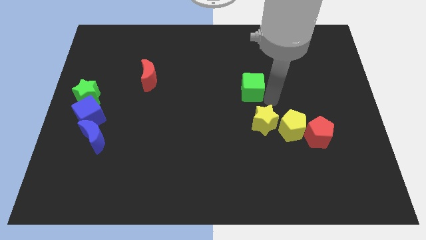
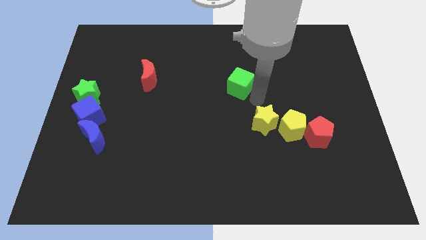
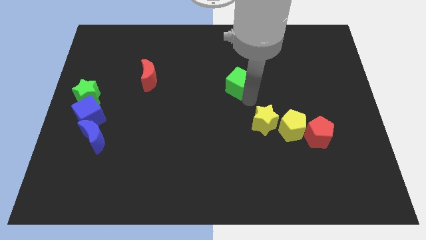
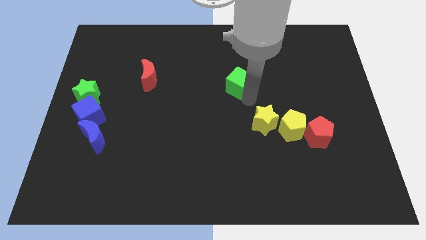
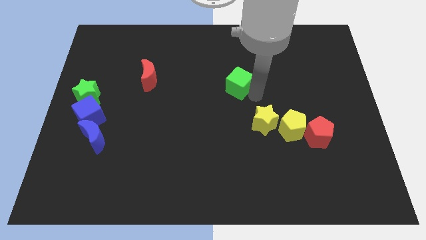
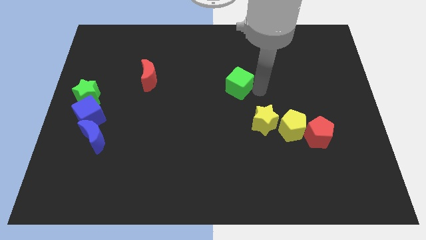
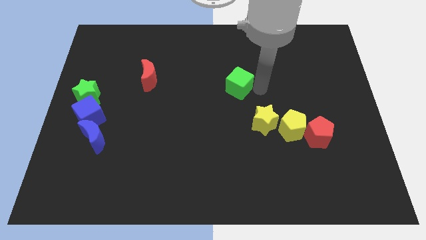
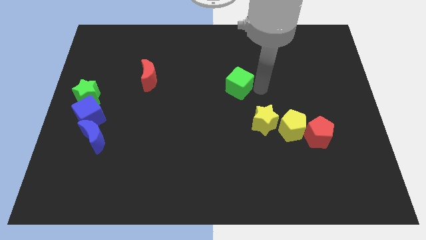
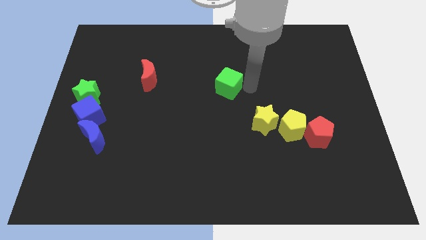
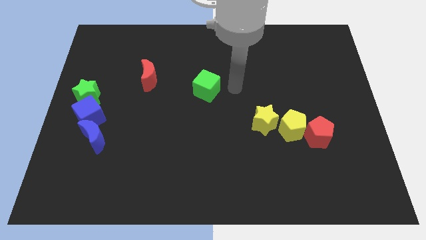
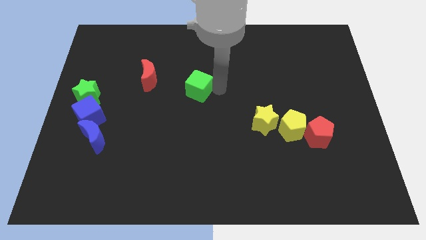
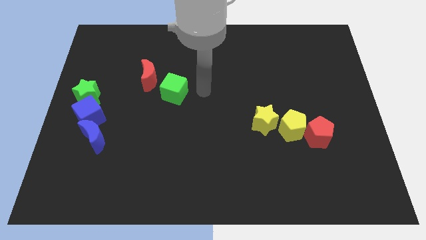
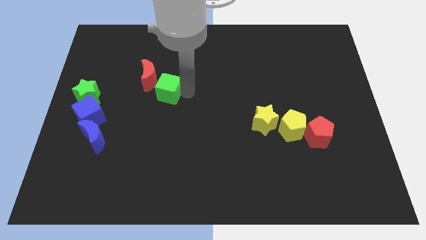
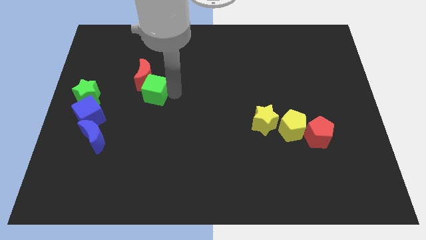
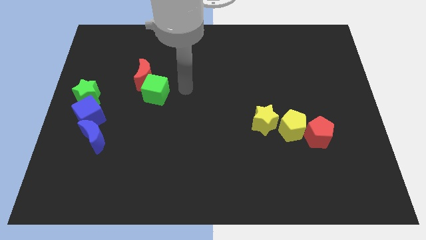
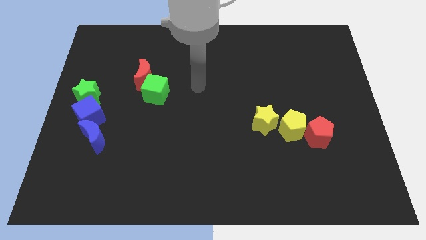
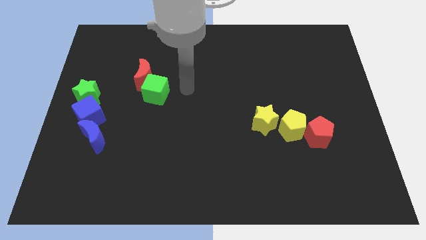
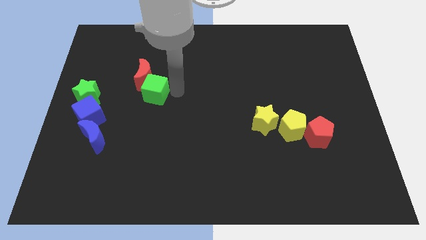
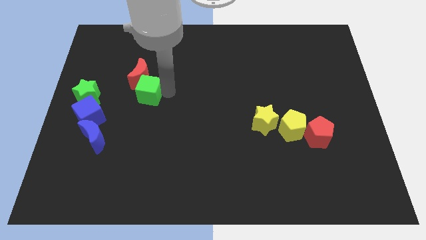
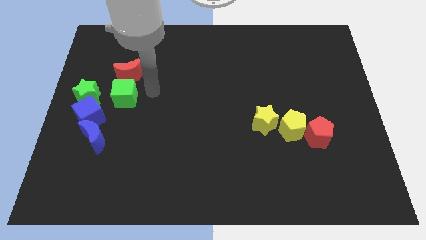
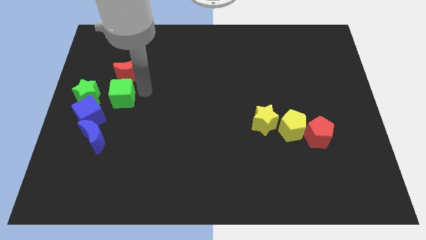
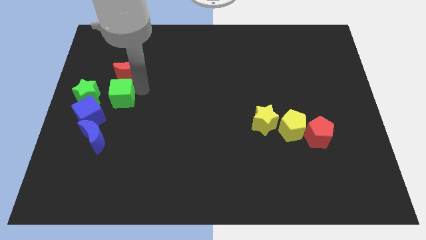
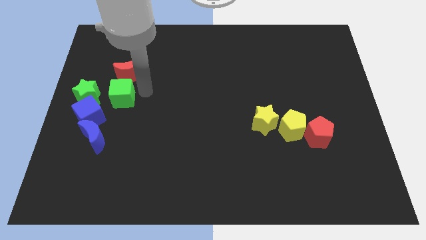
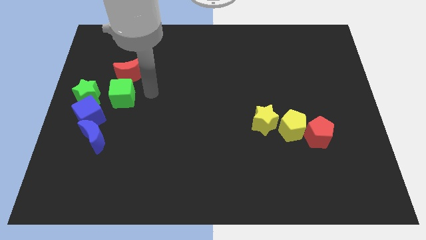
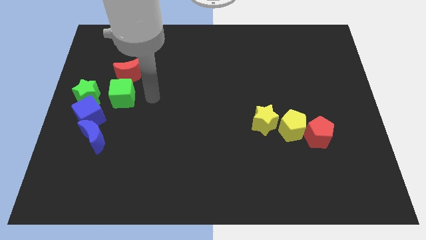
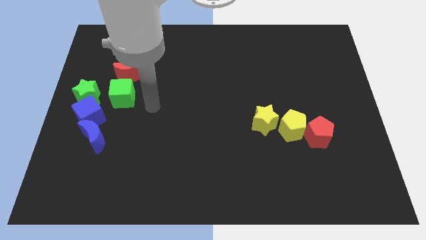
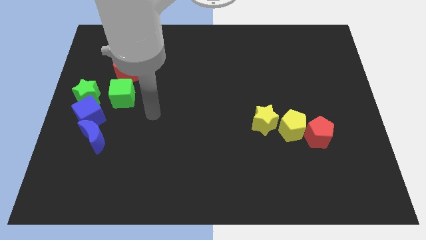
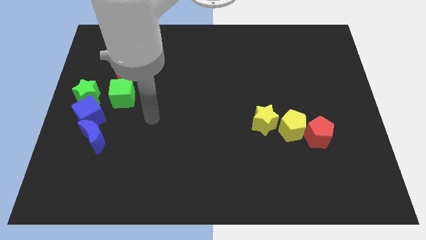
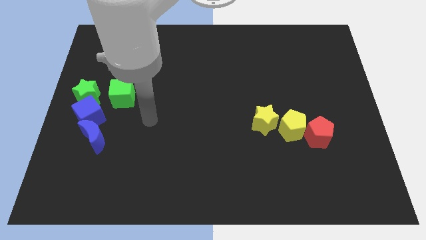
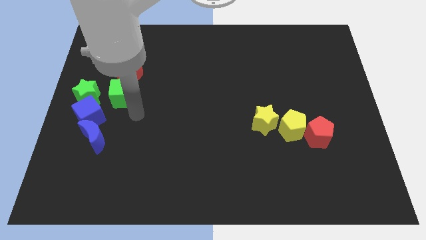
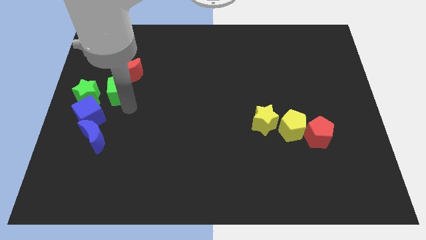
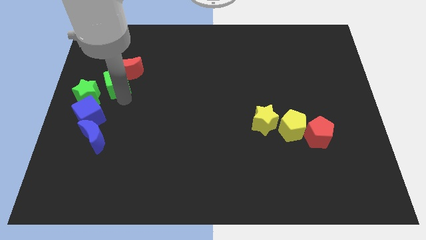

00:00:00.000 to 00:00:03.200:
push the red moon with the green cube

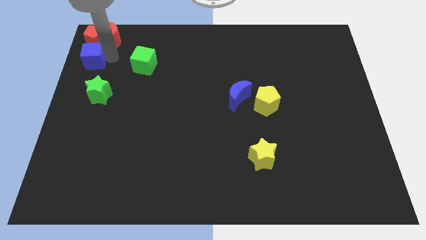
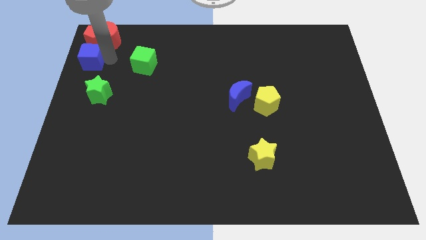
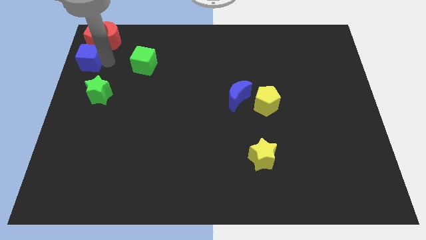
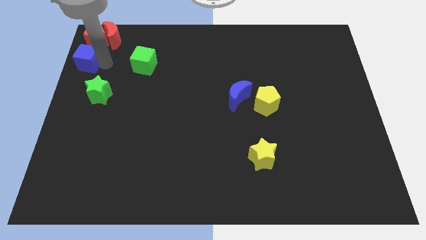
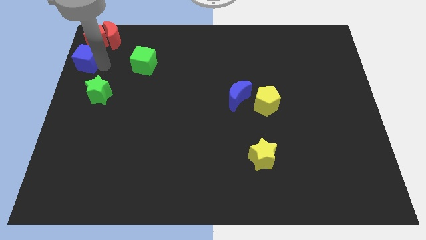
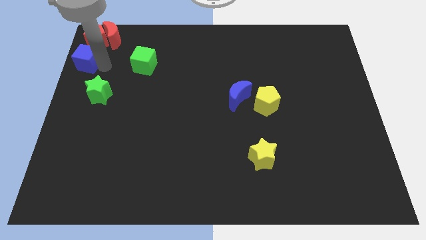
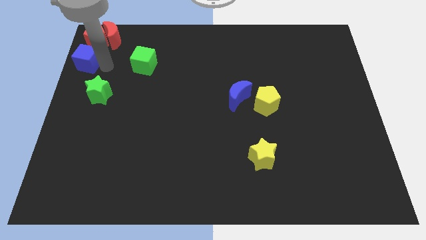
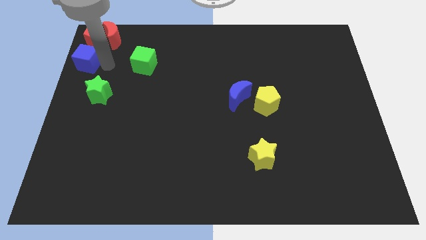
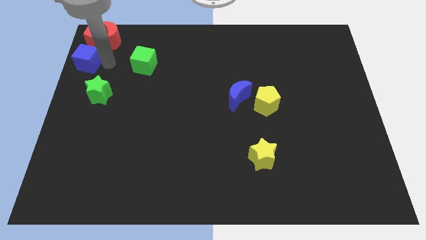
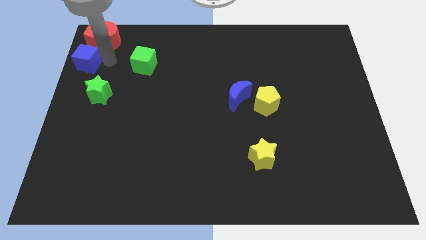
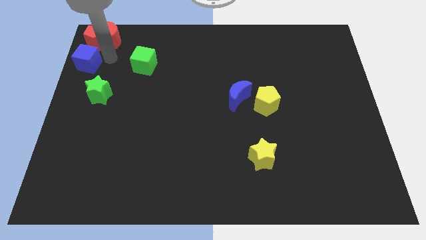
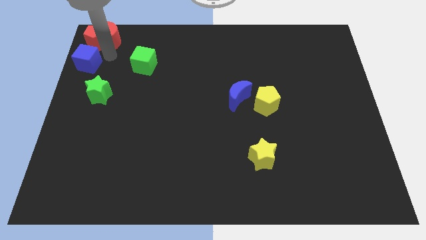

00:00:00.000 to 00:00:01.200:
move the blue cube to the top left

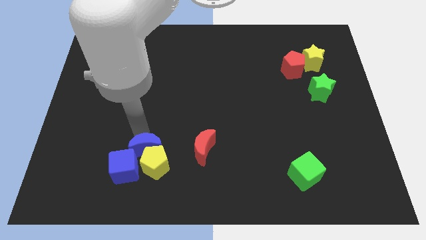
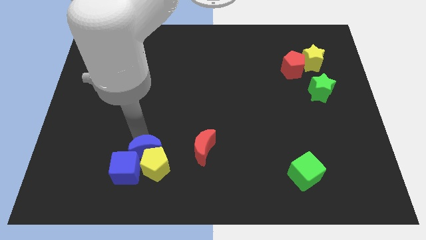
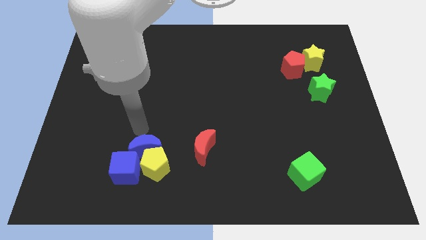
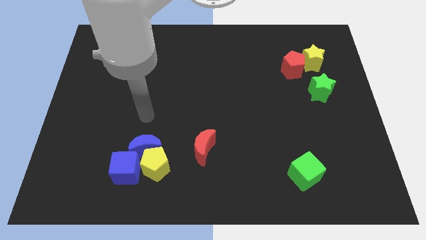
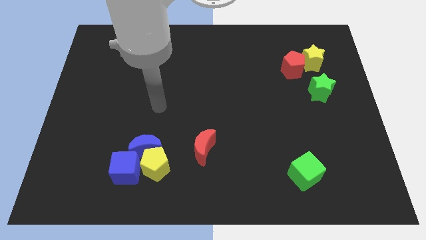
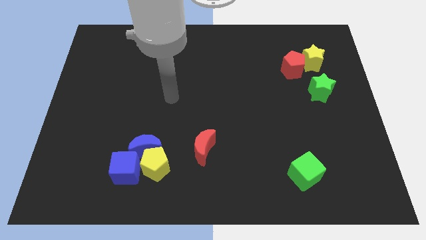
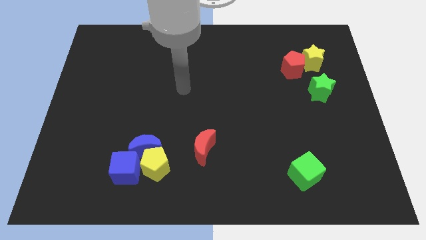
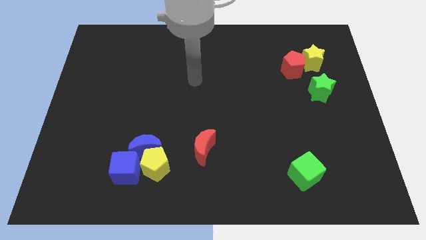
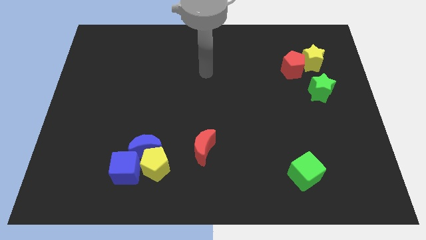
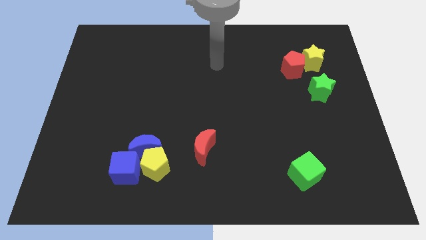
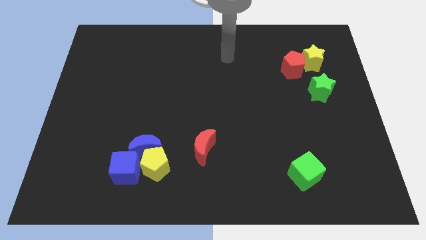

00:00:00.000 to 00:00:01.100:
move your arm away from blue moon

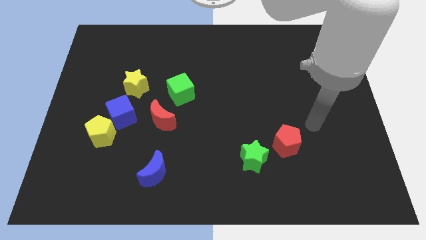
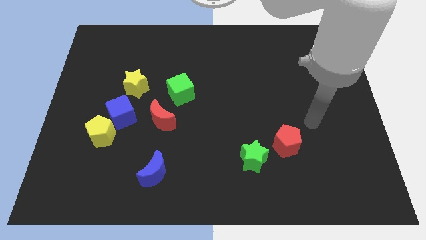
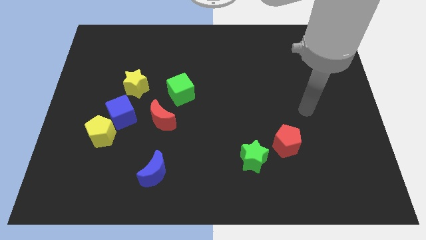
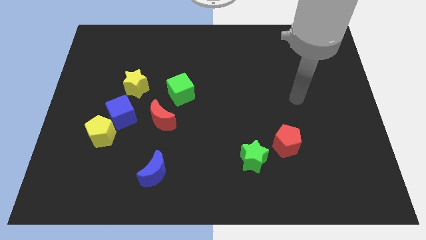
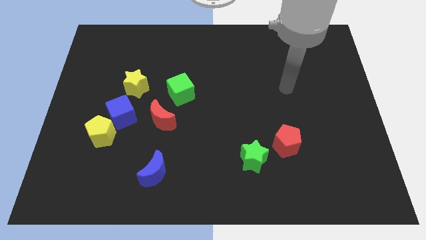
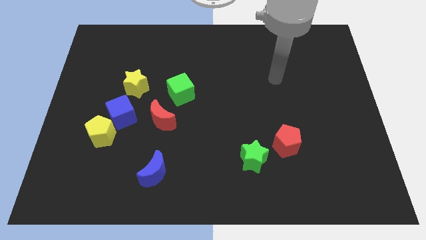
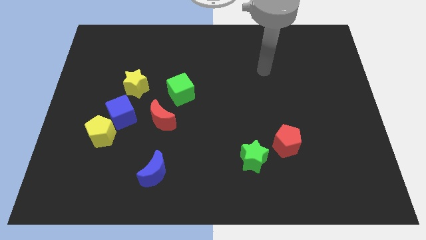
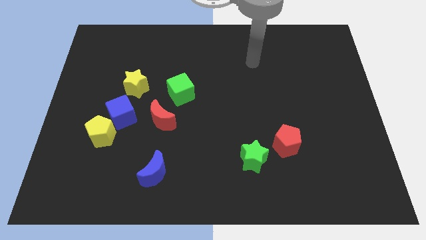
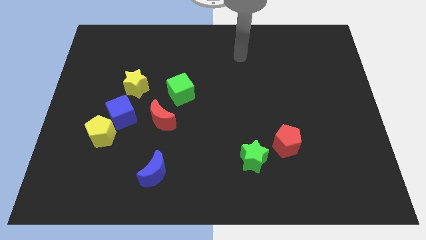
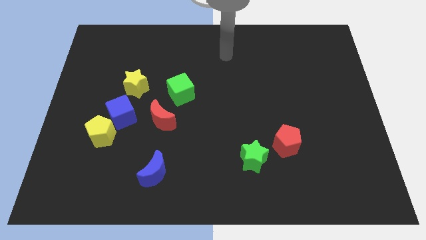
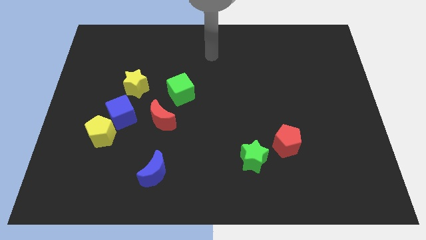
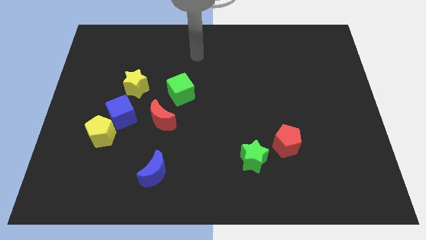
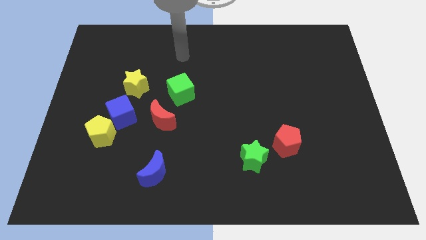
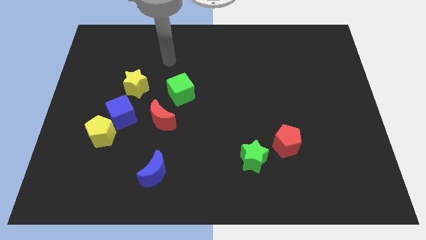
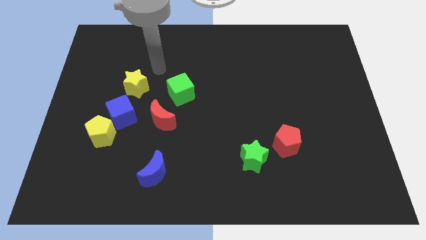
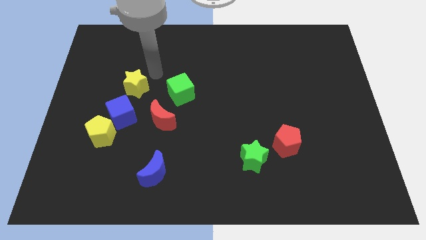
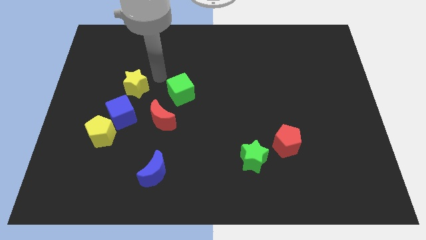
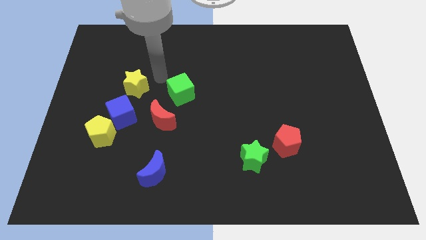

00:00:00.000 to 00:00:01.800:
move your arm towards the green cube

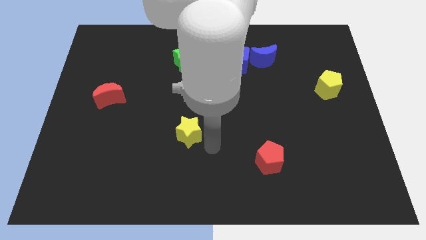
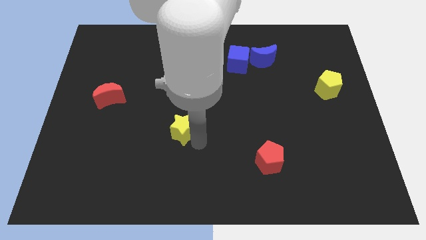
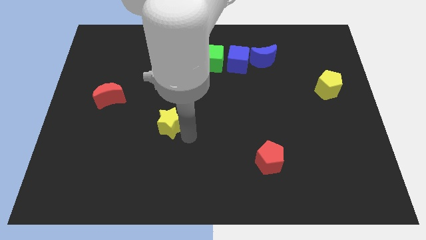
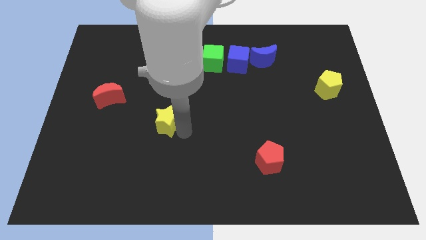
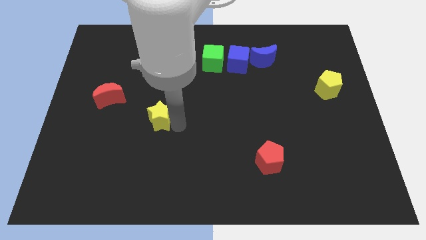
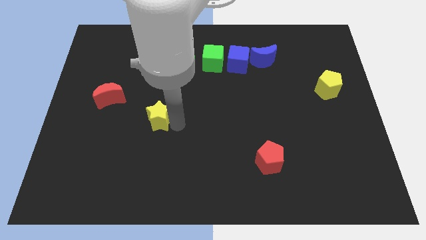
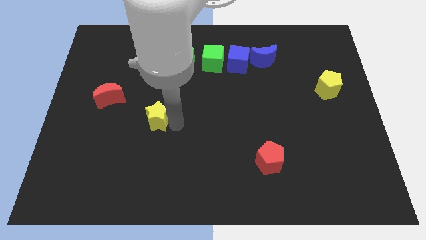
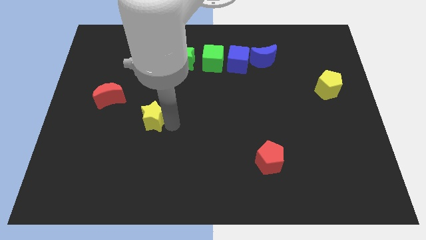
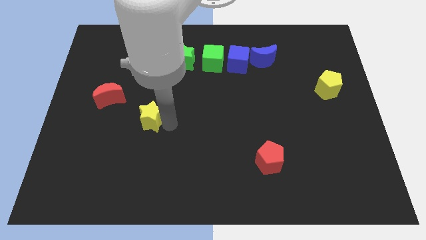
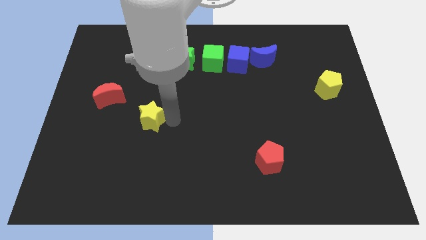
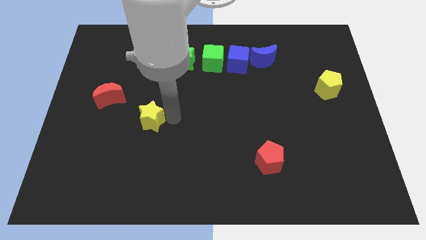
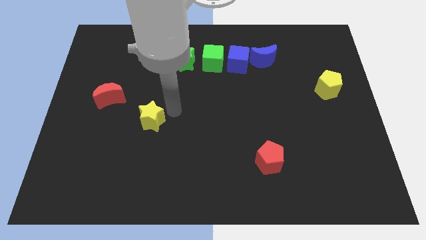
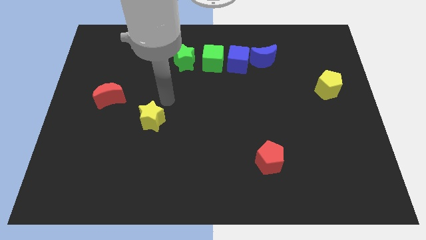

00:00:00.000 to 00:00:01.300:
push the yellow star to the left

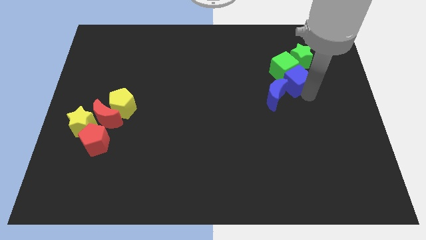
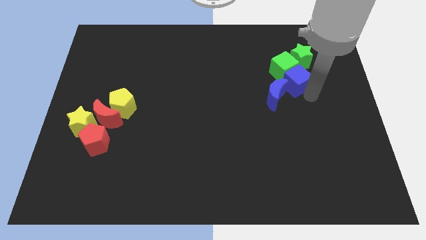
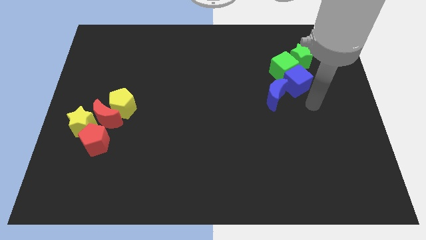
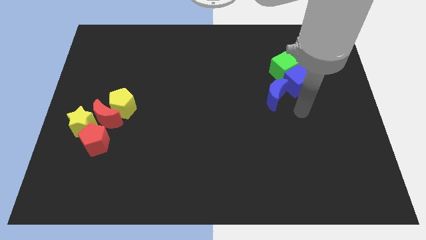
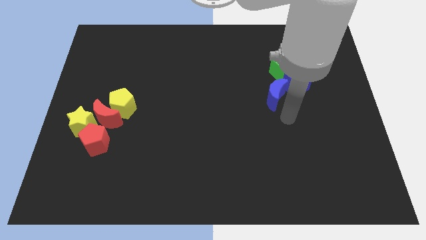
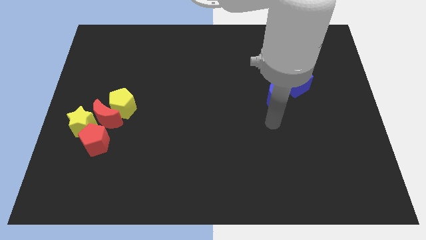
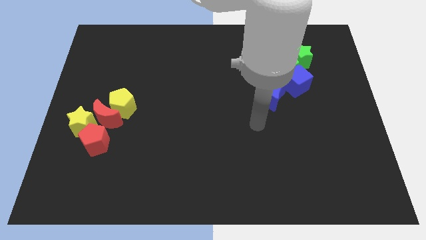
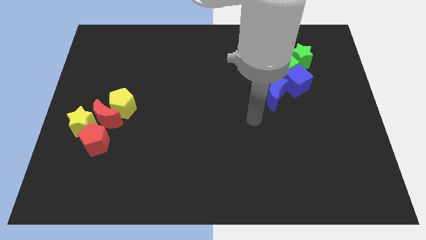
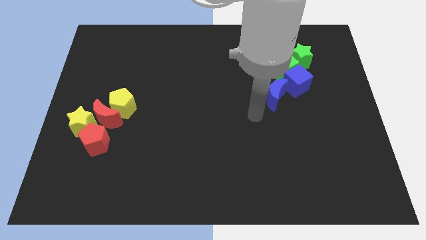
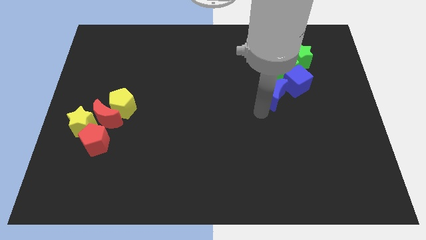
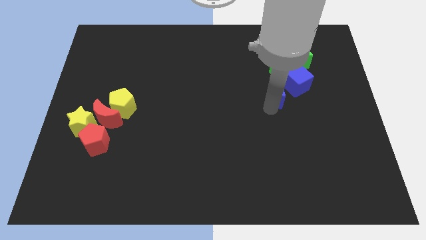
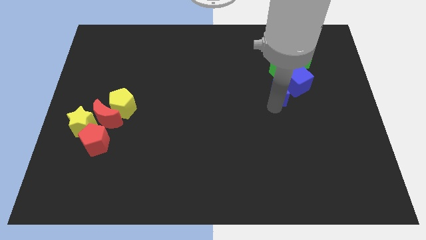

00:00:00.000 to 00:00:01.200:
move your arm close to the blue moon
